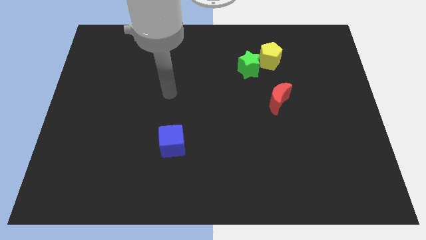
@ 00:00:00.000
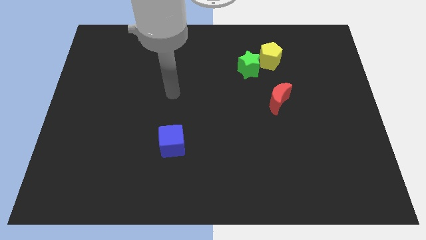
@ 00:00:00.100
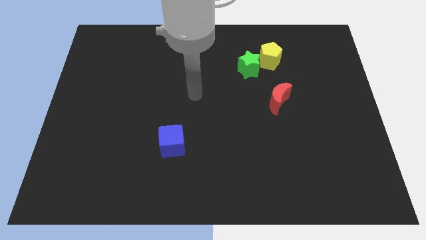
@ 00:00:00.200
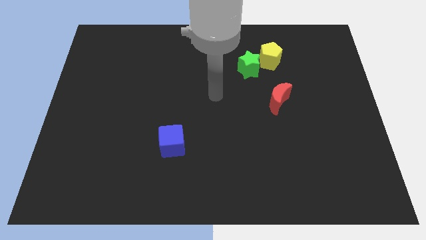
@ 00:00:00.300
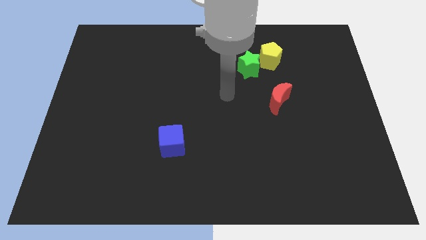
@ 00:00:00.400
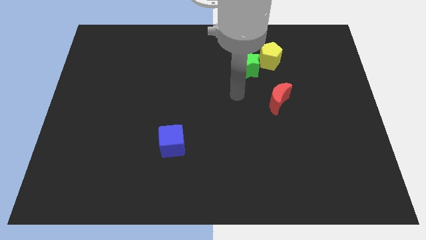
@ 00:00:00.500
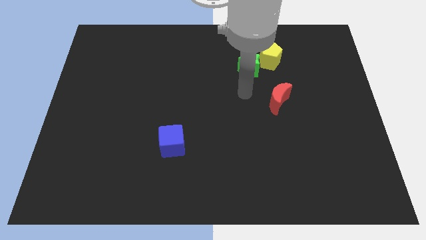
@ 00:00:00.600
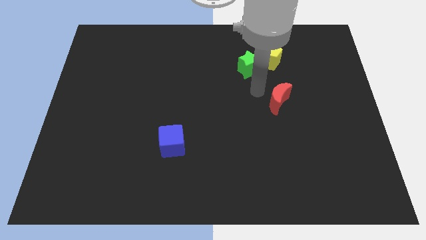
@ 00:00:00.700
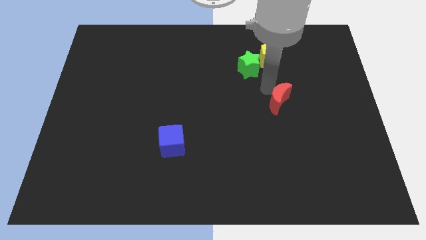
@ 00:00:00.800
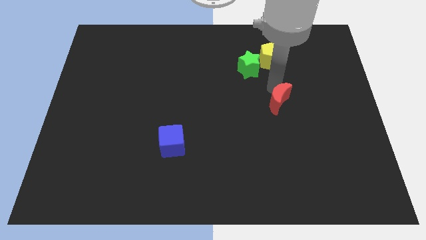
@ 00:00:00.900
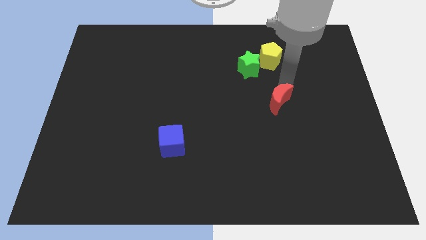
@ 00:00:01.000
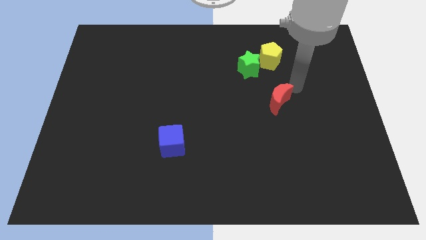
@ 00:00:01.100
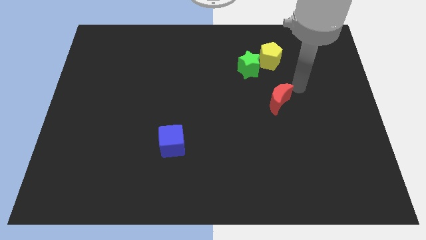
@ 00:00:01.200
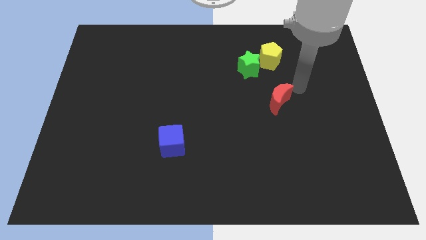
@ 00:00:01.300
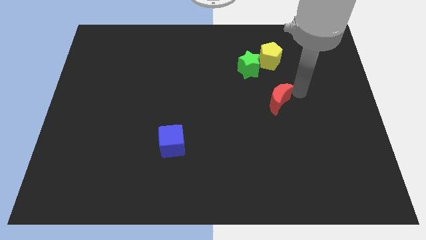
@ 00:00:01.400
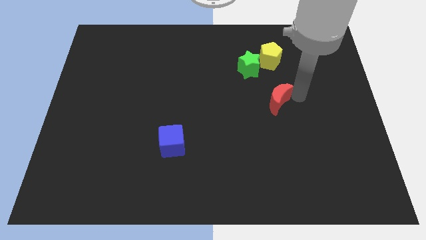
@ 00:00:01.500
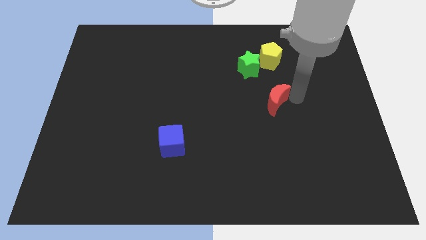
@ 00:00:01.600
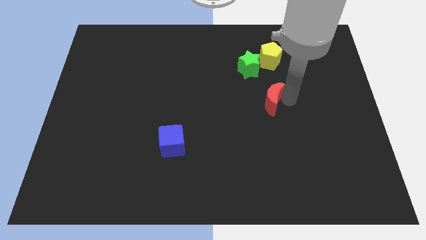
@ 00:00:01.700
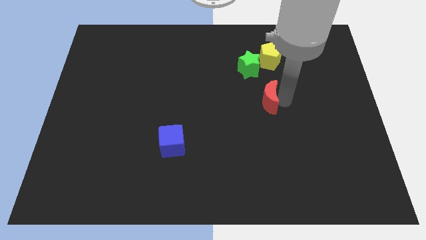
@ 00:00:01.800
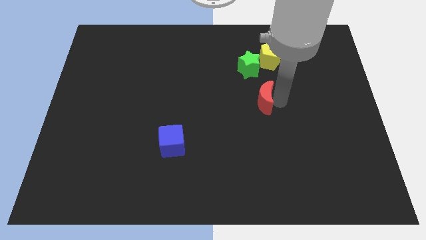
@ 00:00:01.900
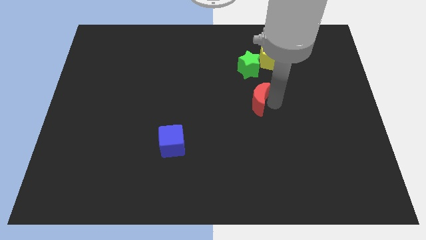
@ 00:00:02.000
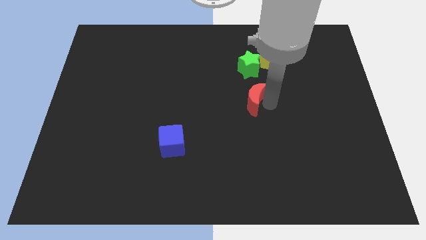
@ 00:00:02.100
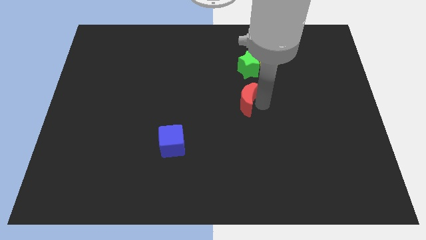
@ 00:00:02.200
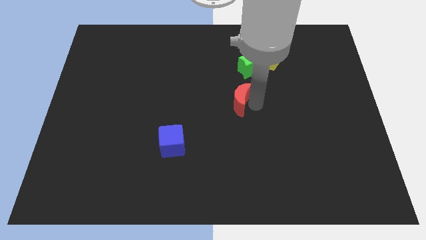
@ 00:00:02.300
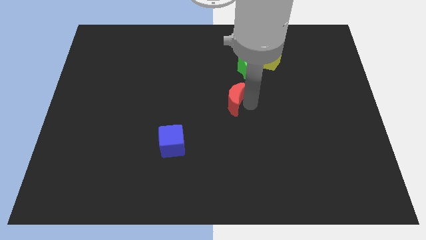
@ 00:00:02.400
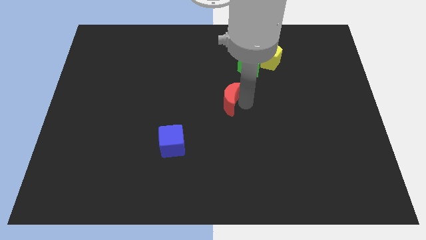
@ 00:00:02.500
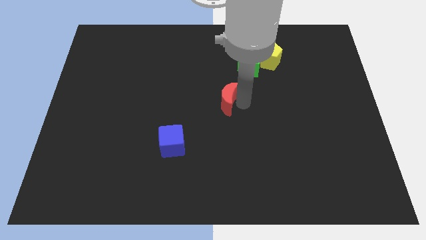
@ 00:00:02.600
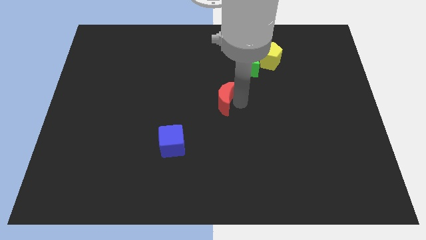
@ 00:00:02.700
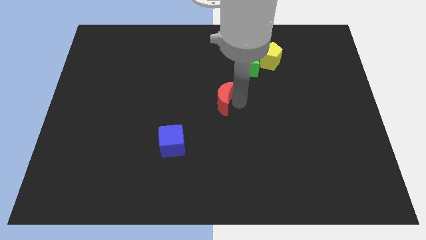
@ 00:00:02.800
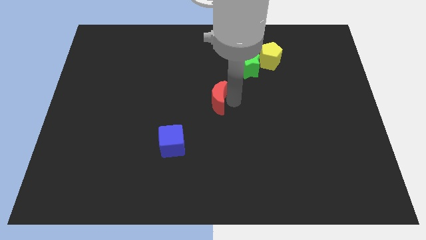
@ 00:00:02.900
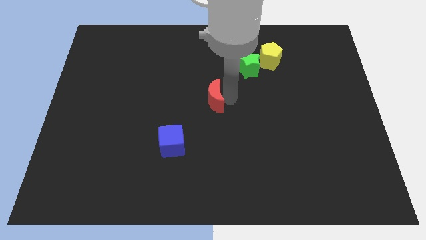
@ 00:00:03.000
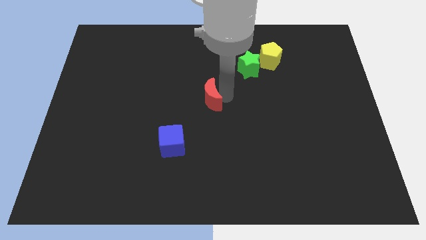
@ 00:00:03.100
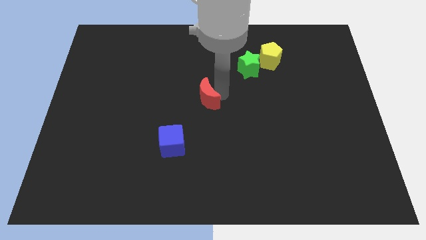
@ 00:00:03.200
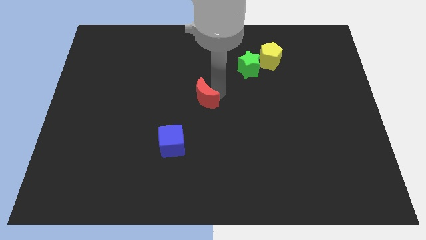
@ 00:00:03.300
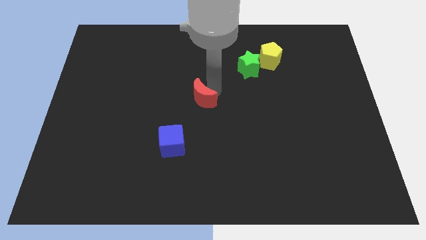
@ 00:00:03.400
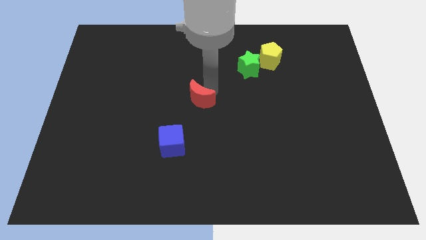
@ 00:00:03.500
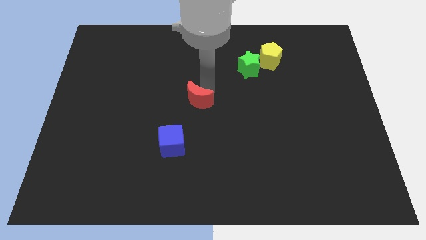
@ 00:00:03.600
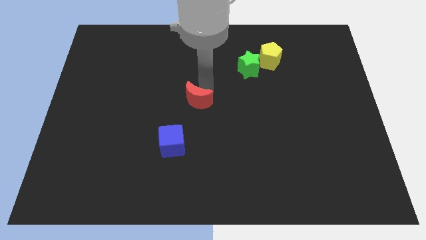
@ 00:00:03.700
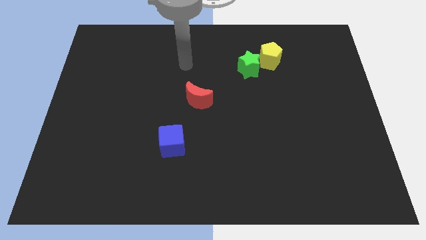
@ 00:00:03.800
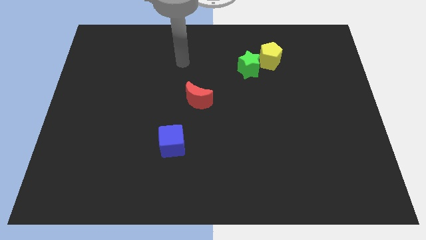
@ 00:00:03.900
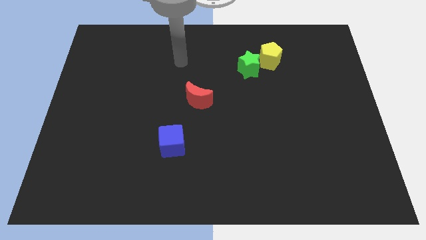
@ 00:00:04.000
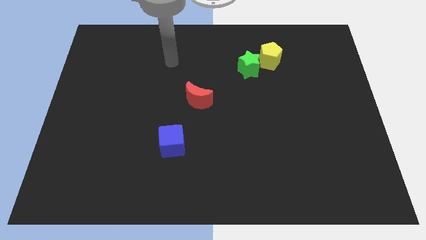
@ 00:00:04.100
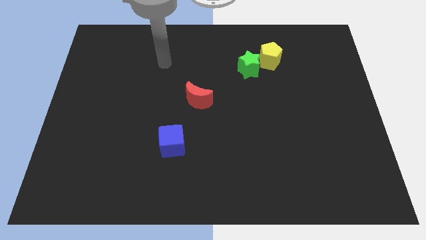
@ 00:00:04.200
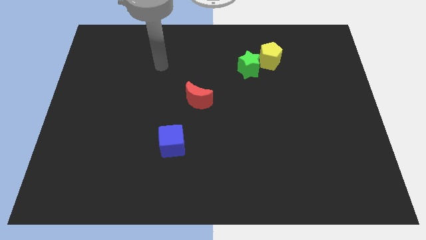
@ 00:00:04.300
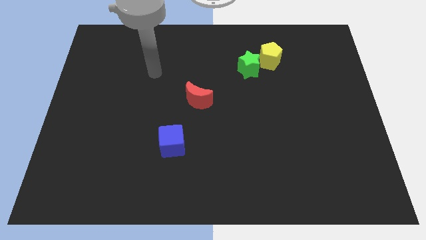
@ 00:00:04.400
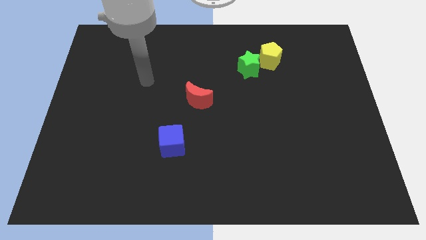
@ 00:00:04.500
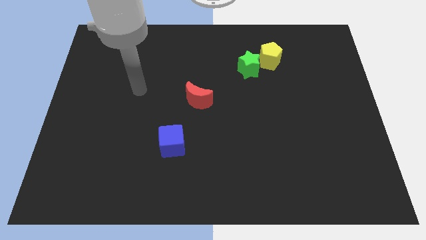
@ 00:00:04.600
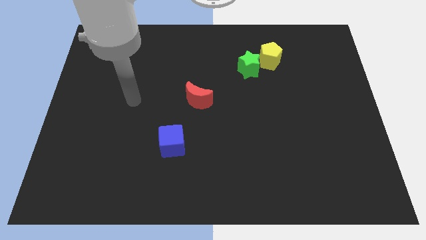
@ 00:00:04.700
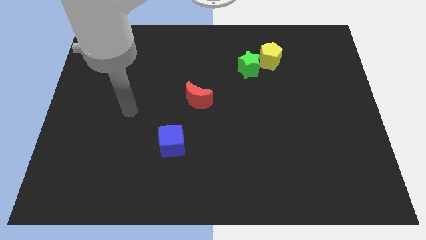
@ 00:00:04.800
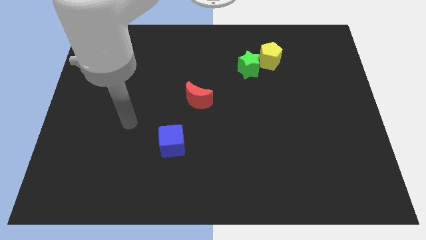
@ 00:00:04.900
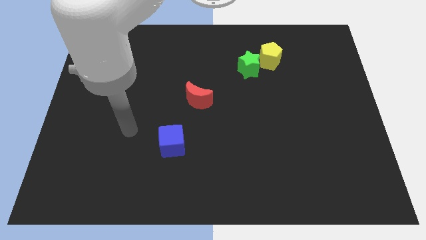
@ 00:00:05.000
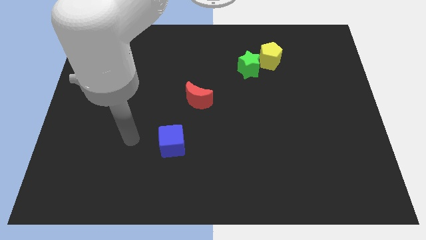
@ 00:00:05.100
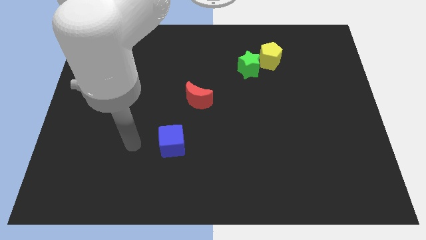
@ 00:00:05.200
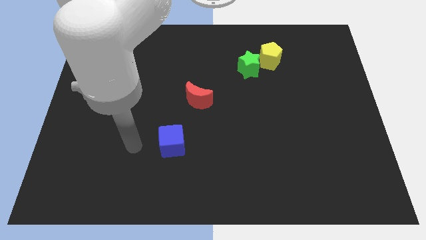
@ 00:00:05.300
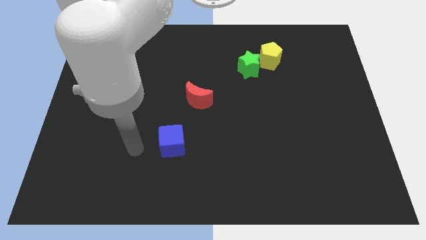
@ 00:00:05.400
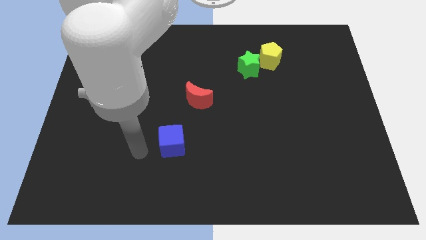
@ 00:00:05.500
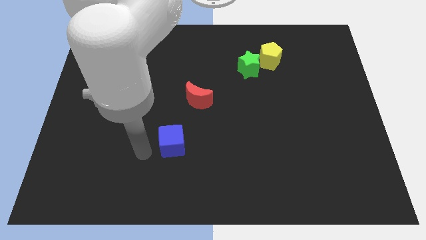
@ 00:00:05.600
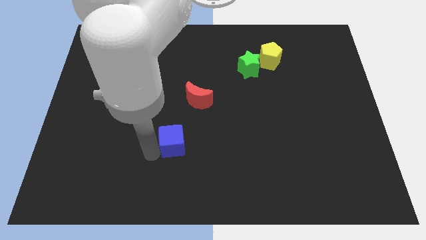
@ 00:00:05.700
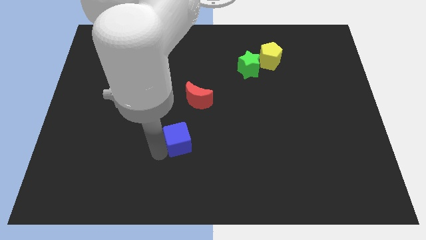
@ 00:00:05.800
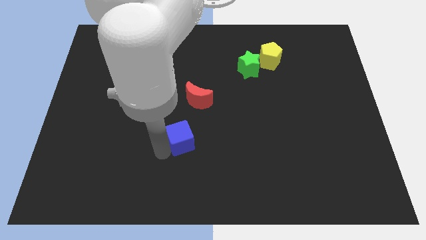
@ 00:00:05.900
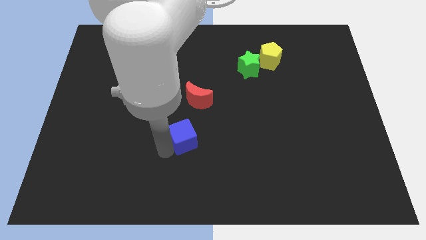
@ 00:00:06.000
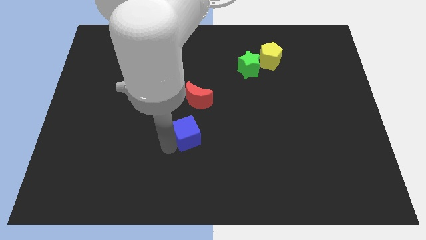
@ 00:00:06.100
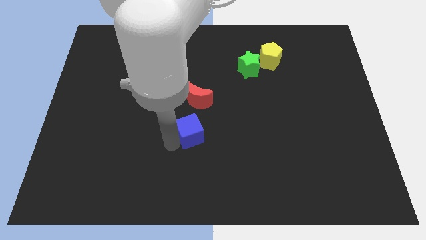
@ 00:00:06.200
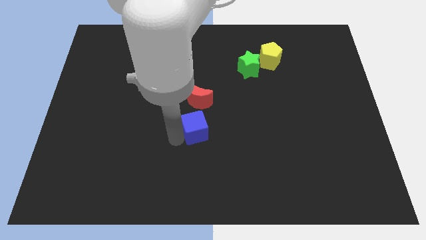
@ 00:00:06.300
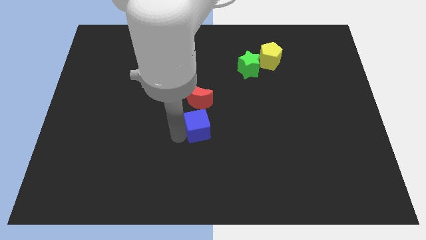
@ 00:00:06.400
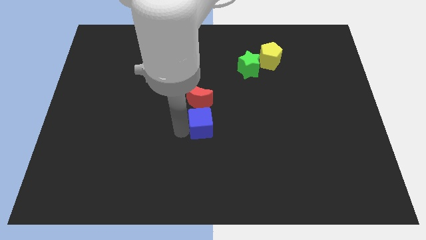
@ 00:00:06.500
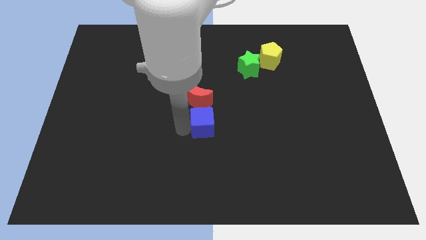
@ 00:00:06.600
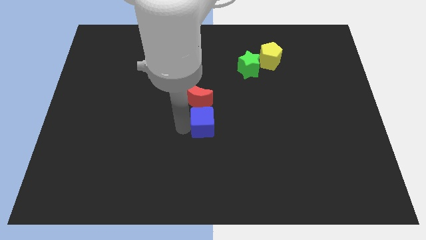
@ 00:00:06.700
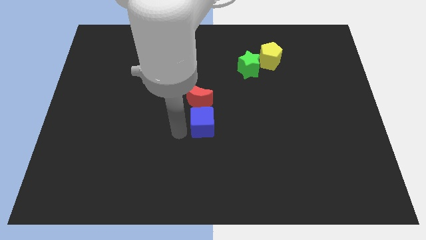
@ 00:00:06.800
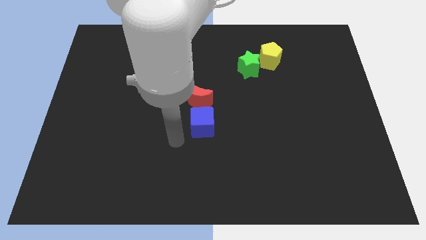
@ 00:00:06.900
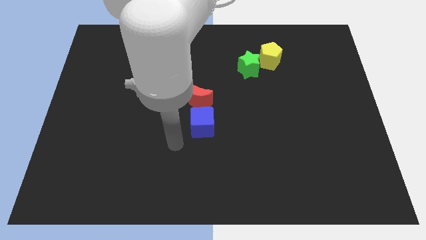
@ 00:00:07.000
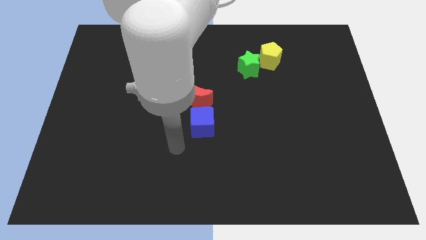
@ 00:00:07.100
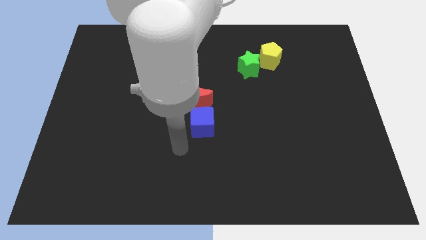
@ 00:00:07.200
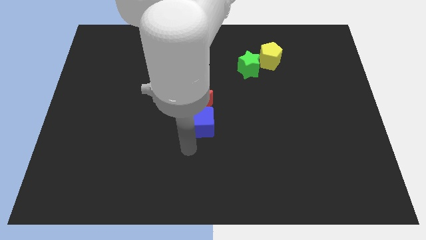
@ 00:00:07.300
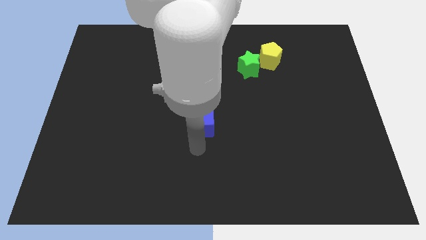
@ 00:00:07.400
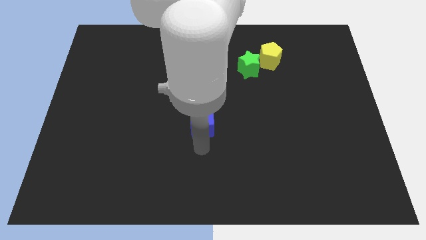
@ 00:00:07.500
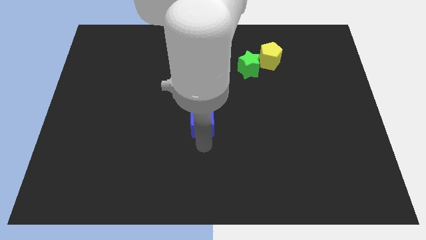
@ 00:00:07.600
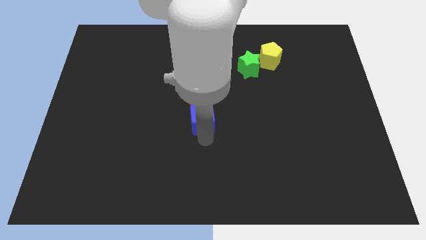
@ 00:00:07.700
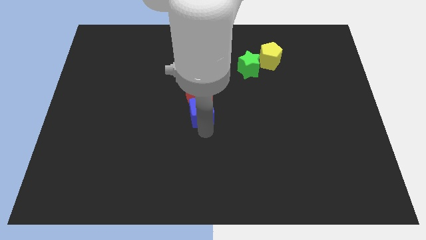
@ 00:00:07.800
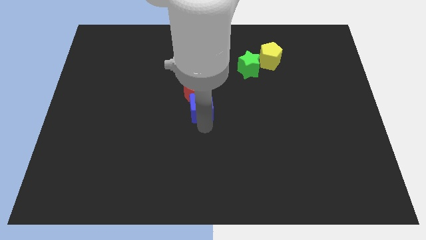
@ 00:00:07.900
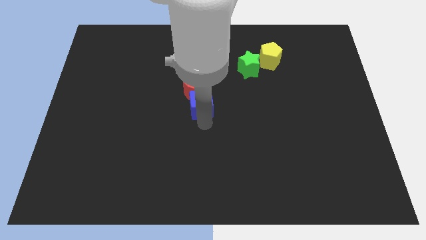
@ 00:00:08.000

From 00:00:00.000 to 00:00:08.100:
move the blue cube next to the red moon
